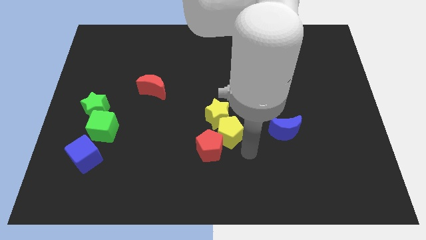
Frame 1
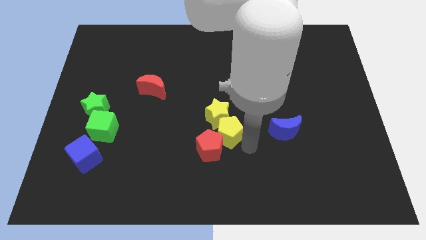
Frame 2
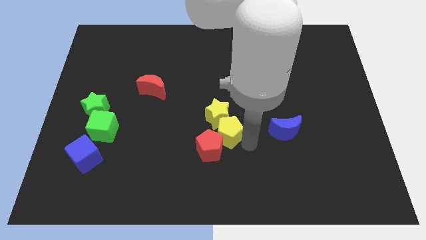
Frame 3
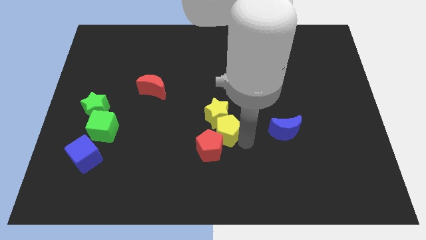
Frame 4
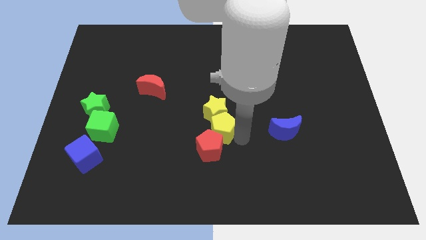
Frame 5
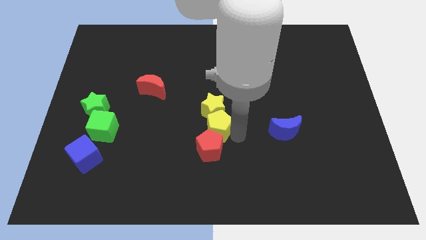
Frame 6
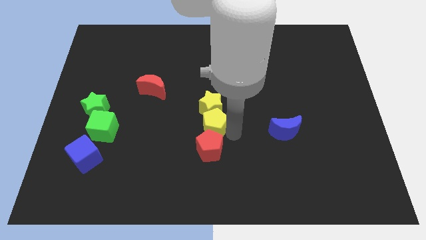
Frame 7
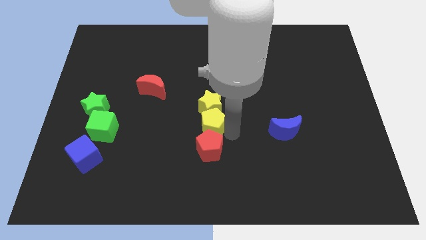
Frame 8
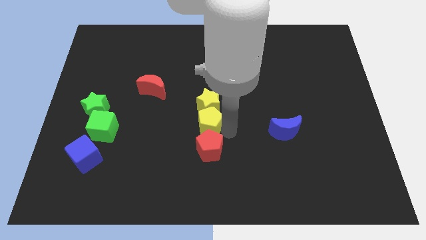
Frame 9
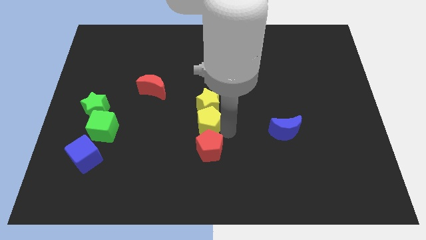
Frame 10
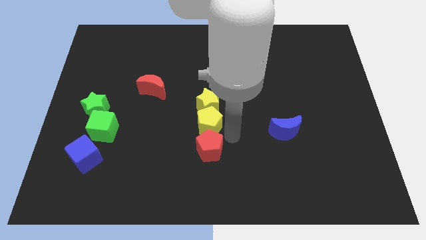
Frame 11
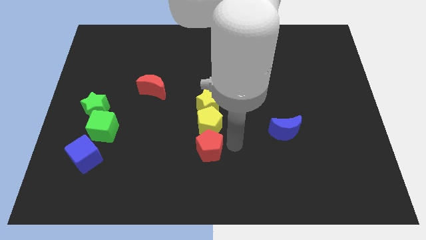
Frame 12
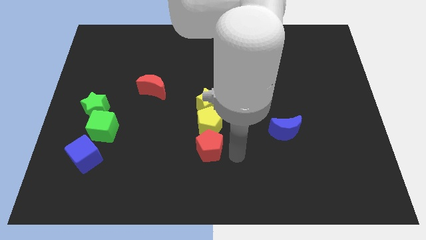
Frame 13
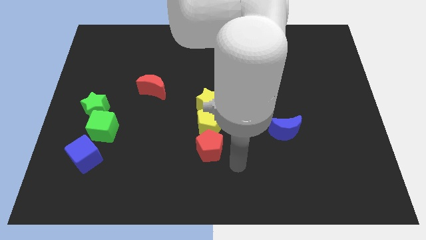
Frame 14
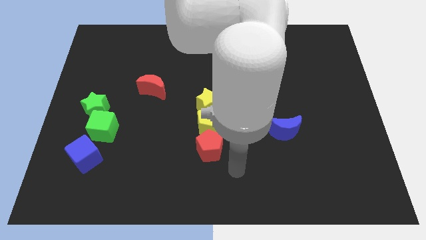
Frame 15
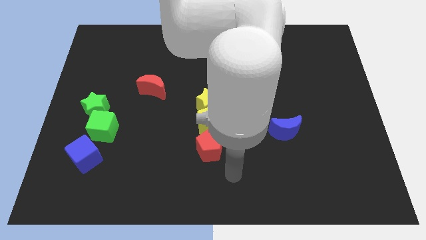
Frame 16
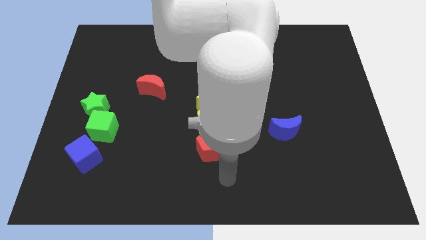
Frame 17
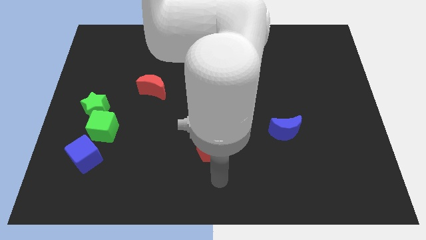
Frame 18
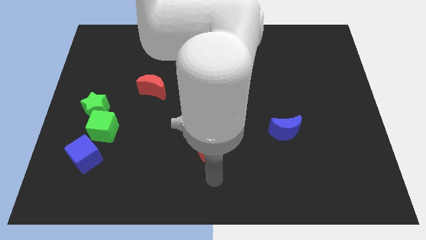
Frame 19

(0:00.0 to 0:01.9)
arrange yellow blocks and red pentagon in a vertical line

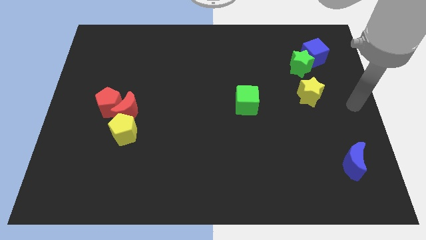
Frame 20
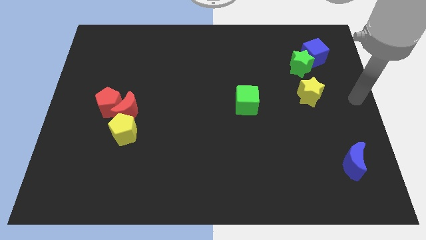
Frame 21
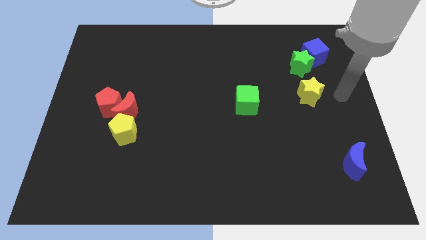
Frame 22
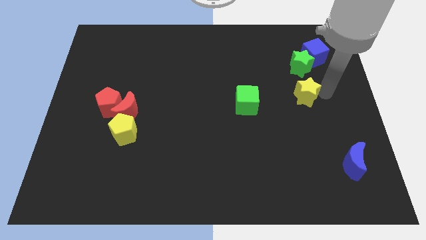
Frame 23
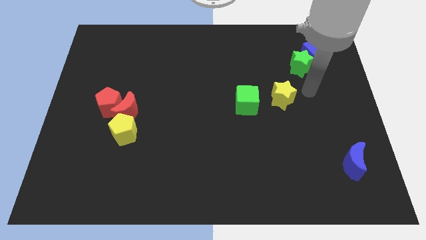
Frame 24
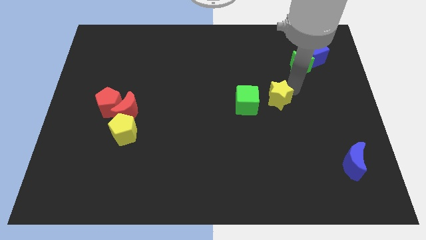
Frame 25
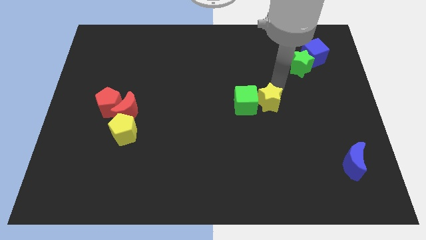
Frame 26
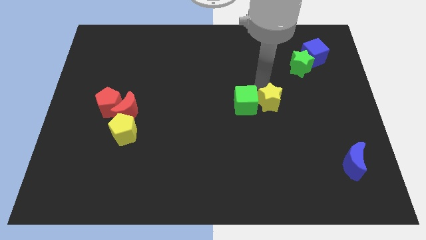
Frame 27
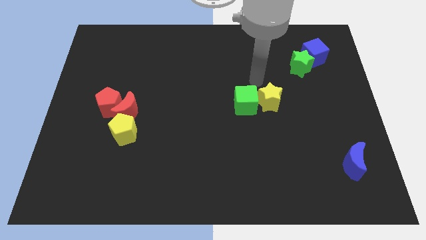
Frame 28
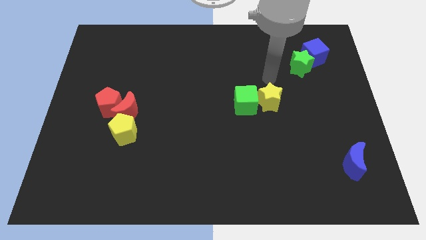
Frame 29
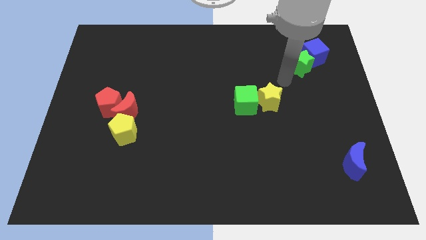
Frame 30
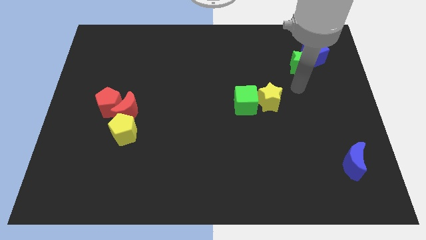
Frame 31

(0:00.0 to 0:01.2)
push the yellow star to the right of the green cube

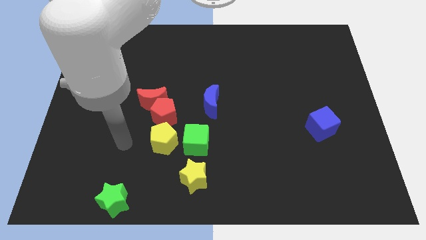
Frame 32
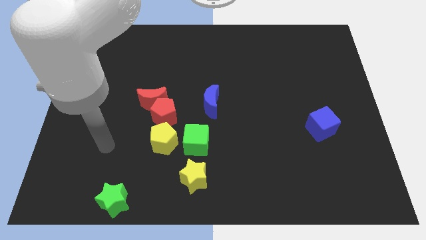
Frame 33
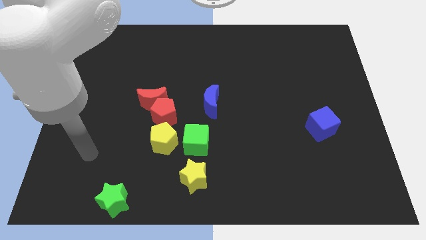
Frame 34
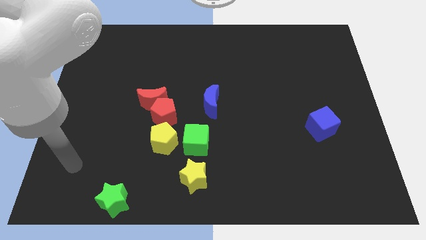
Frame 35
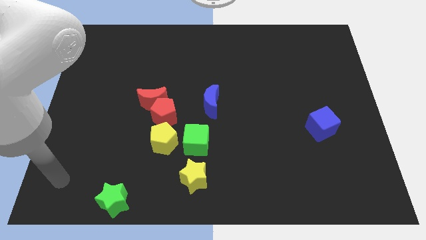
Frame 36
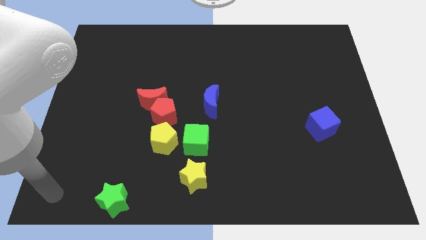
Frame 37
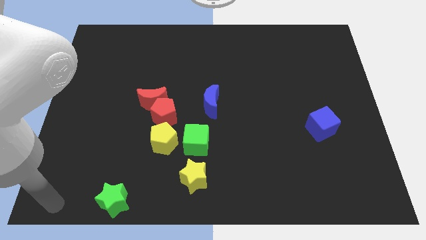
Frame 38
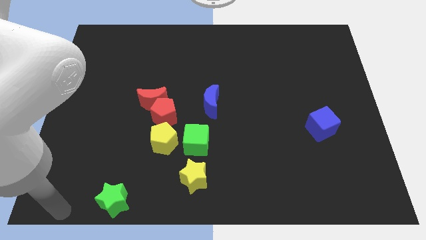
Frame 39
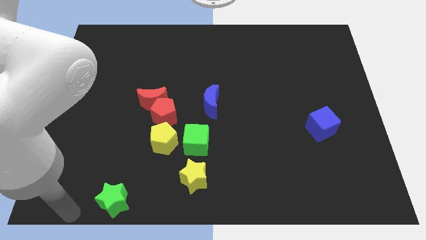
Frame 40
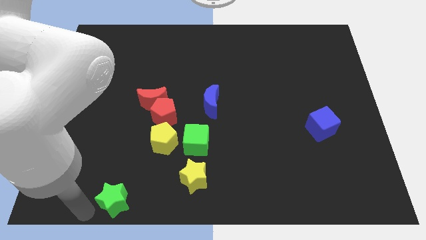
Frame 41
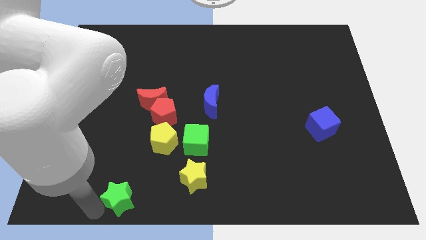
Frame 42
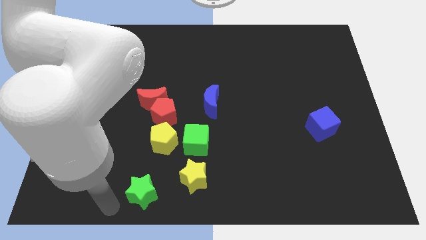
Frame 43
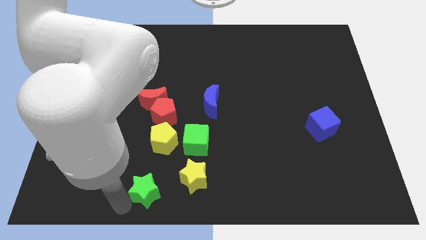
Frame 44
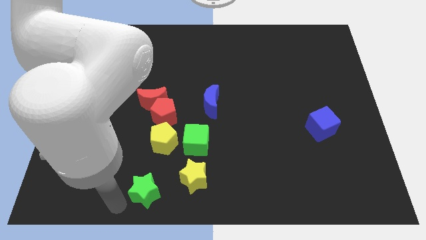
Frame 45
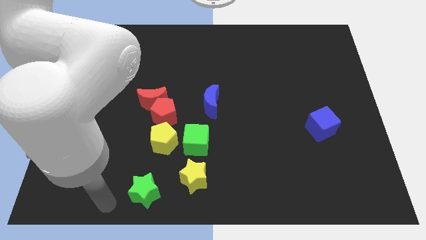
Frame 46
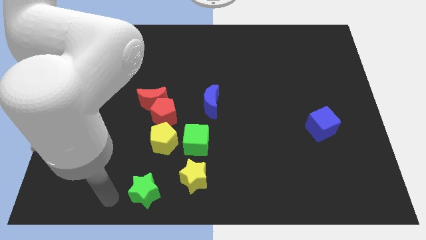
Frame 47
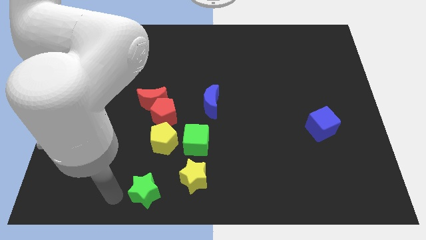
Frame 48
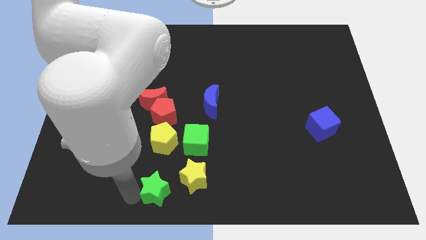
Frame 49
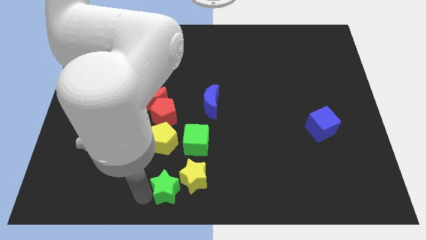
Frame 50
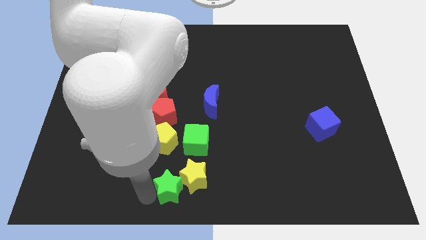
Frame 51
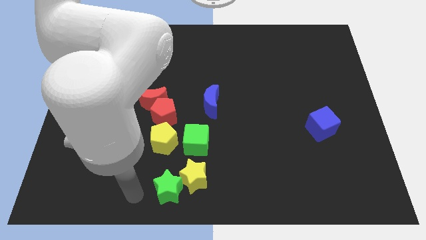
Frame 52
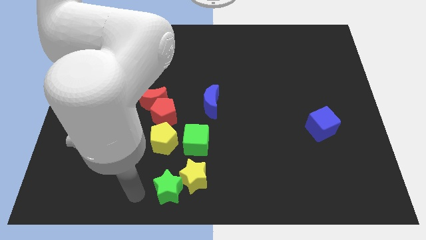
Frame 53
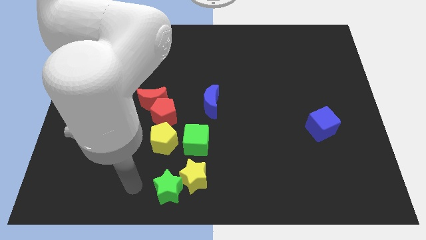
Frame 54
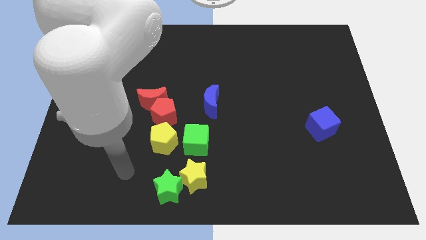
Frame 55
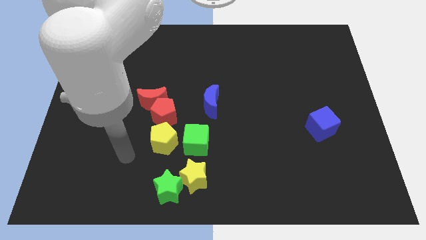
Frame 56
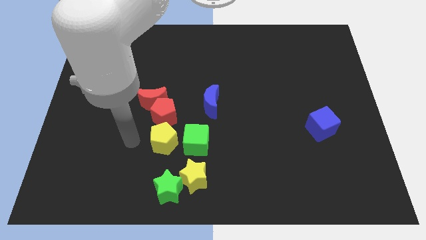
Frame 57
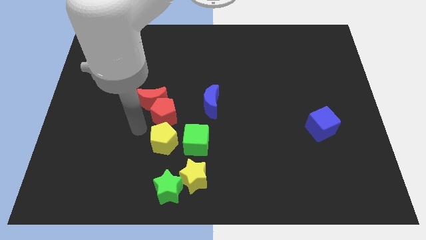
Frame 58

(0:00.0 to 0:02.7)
place the green star to the left of yellow star

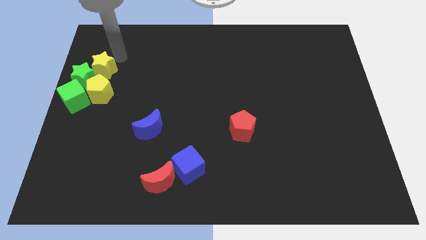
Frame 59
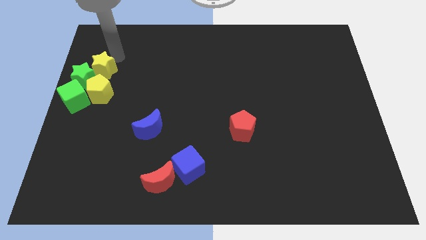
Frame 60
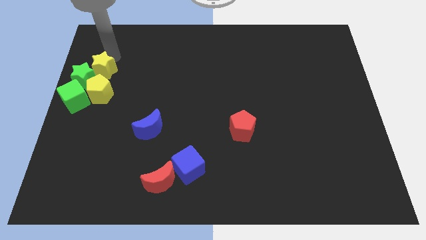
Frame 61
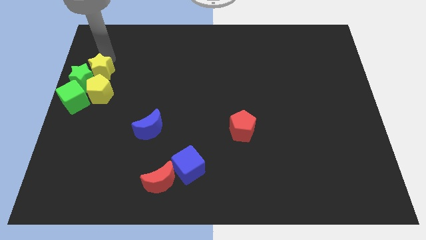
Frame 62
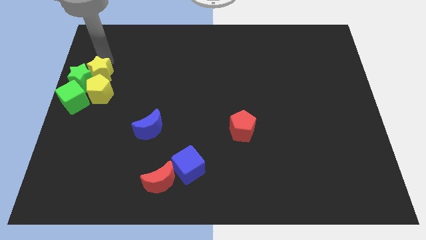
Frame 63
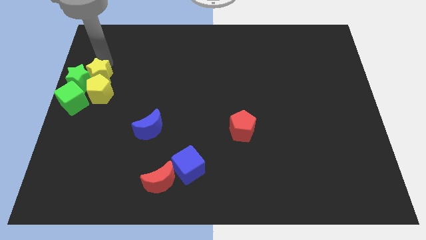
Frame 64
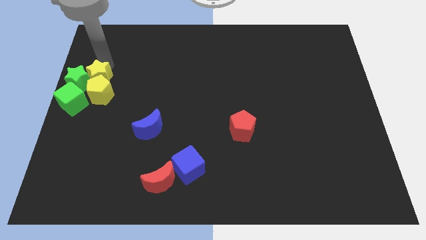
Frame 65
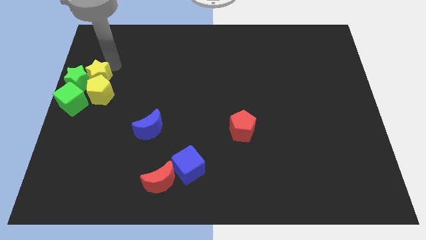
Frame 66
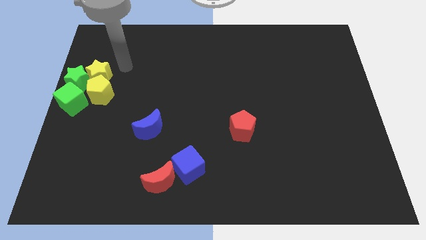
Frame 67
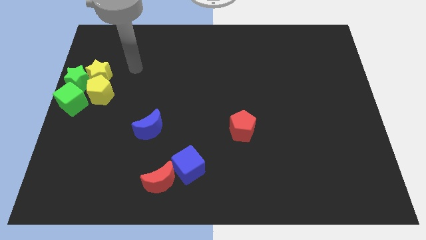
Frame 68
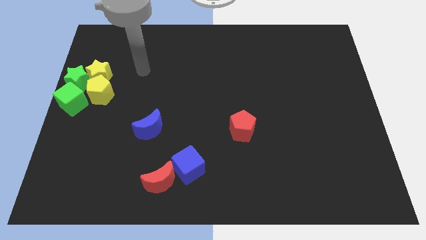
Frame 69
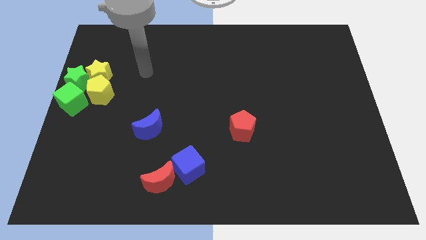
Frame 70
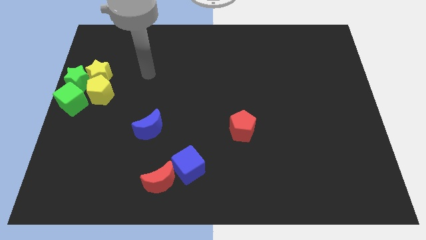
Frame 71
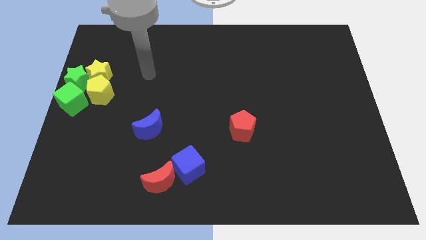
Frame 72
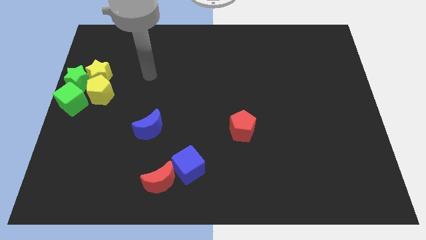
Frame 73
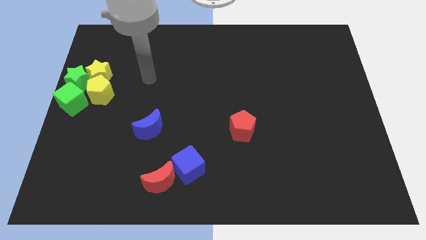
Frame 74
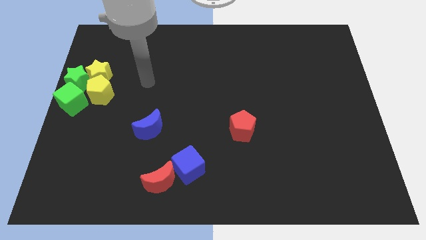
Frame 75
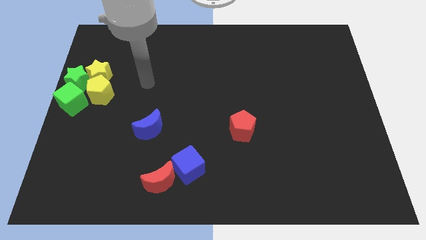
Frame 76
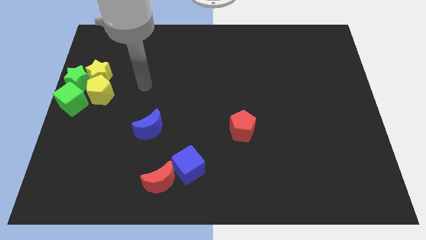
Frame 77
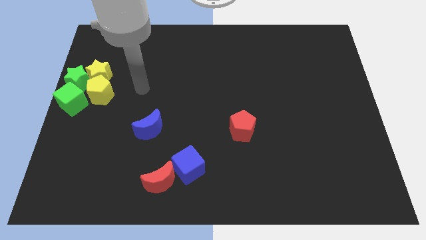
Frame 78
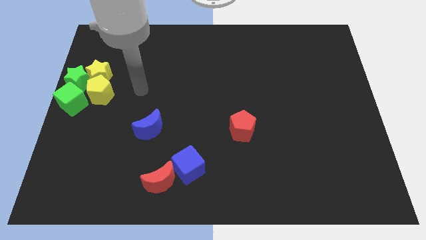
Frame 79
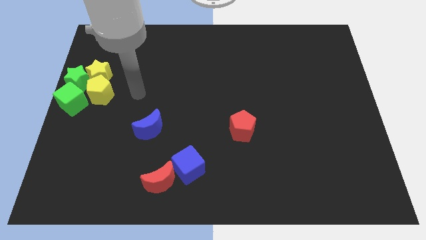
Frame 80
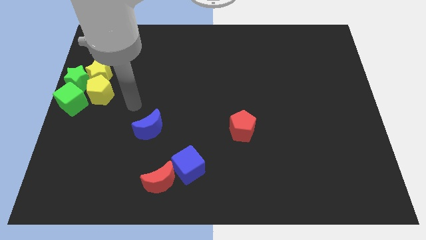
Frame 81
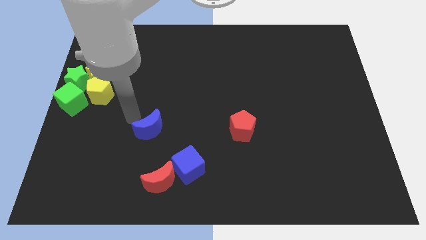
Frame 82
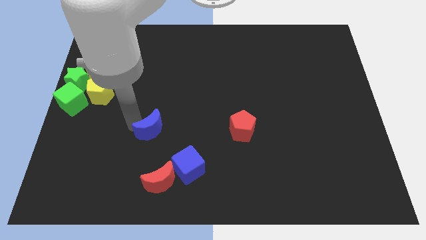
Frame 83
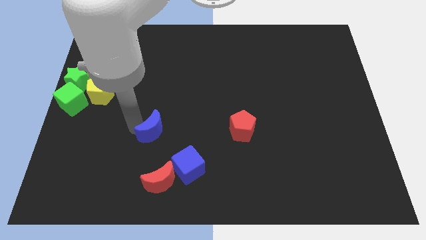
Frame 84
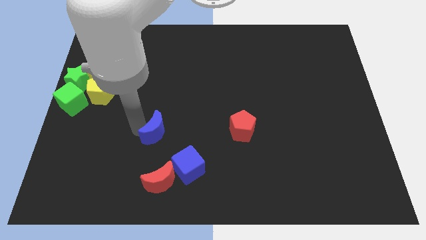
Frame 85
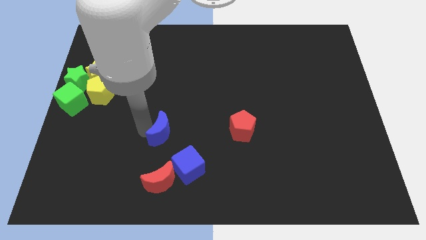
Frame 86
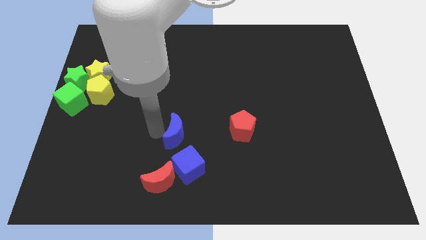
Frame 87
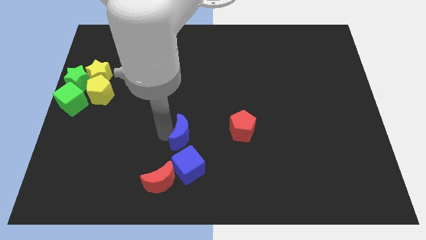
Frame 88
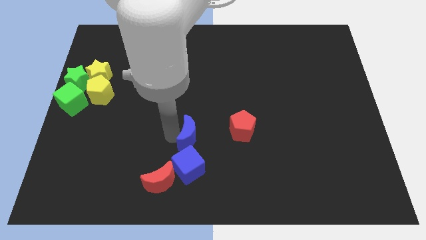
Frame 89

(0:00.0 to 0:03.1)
place blue moon to the top of blue cube
